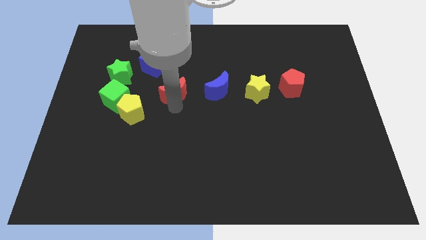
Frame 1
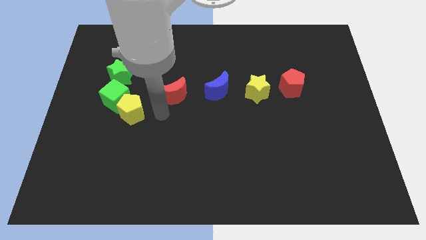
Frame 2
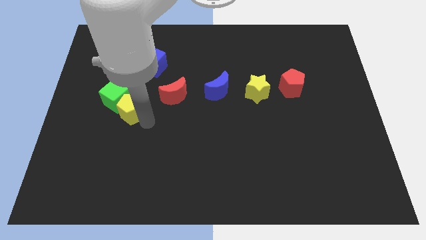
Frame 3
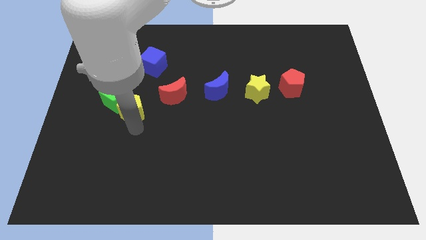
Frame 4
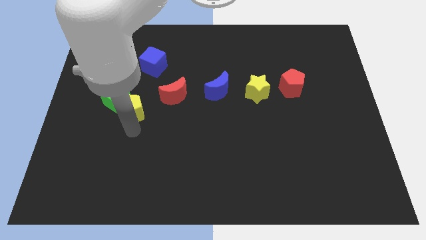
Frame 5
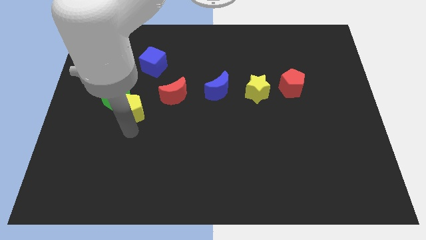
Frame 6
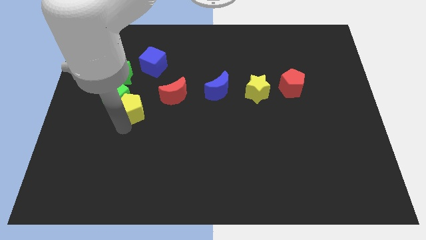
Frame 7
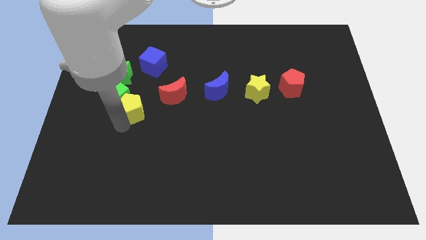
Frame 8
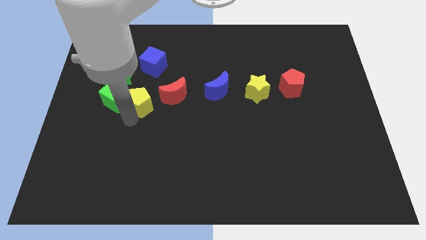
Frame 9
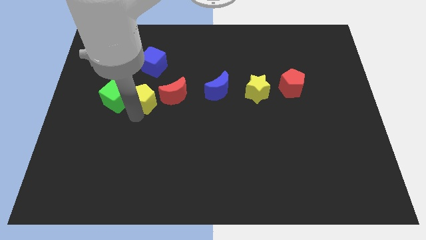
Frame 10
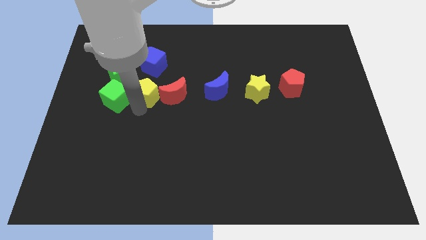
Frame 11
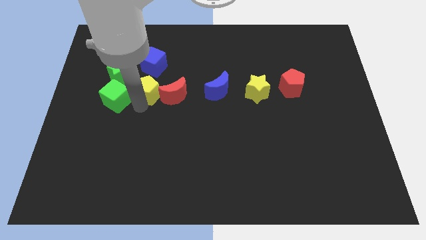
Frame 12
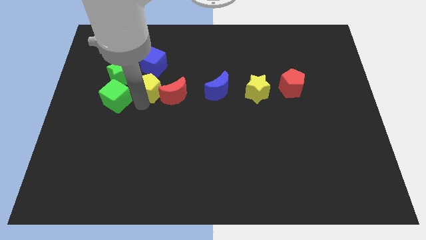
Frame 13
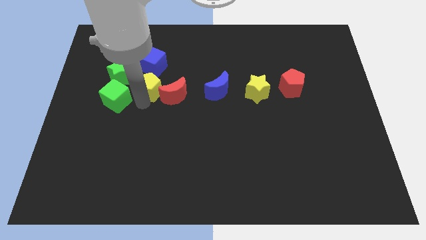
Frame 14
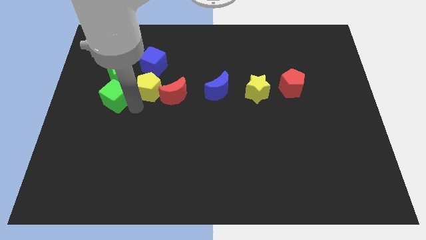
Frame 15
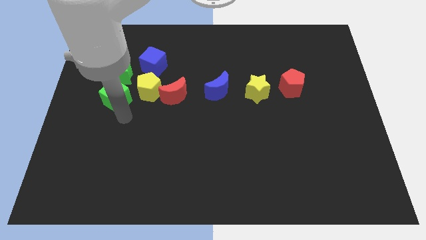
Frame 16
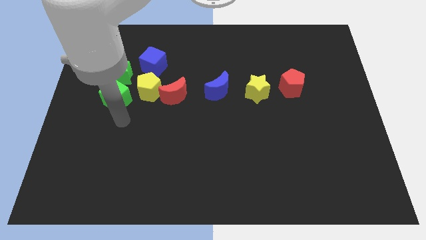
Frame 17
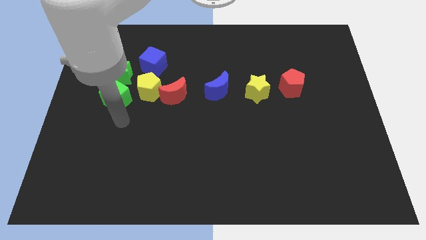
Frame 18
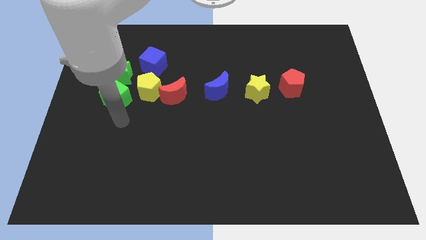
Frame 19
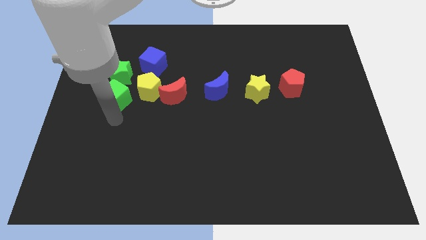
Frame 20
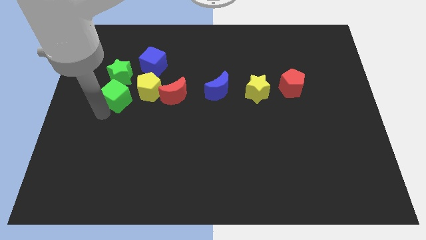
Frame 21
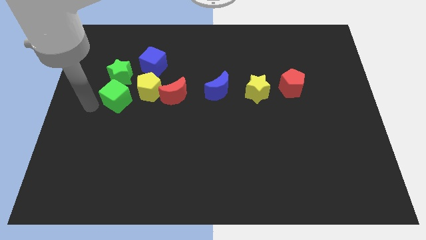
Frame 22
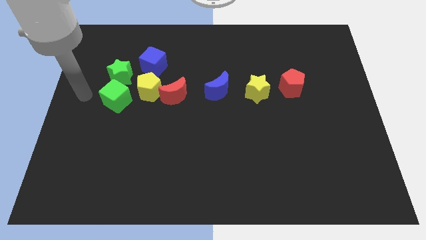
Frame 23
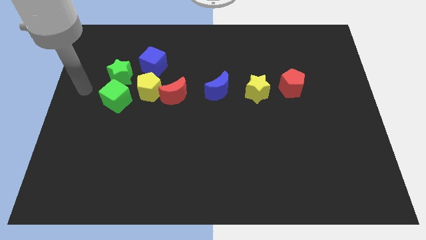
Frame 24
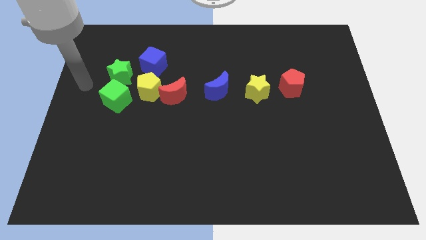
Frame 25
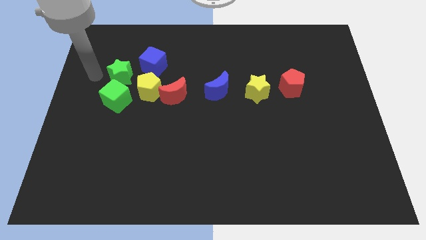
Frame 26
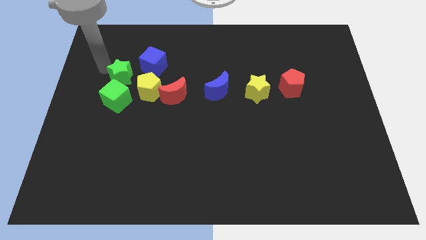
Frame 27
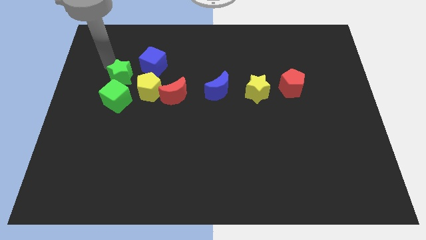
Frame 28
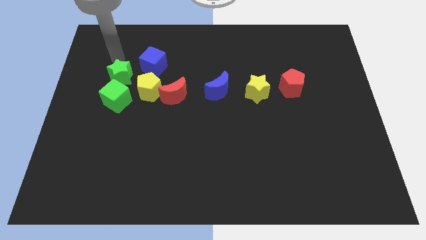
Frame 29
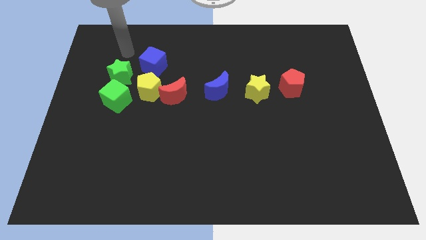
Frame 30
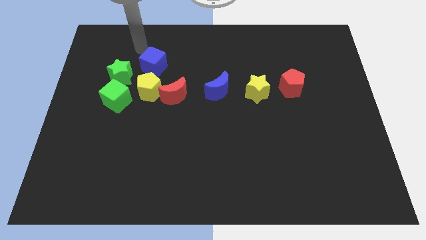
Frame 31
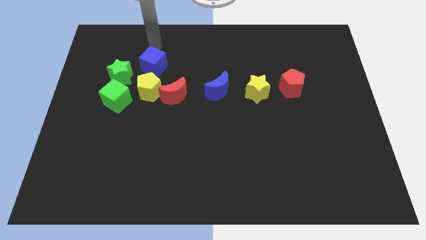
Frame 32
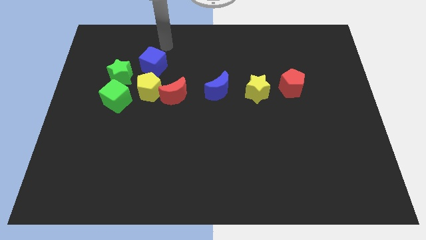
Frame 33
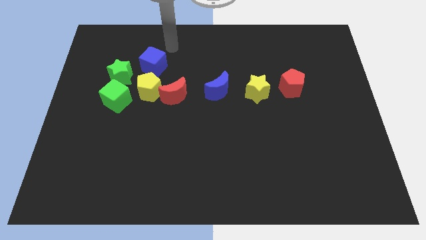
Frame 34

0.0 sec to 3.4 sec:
place the yellow pentagon and blue cube in a line vertically

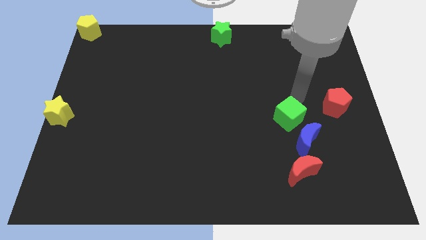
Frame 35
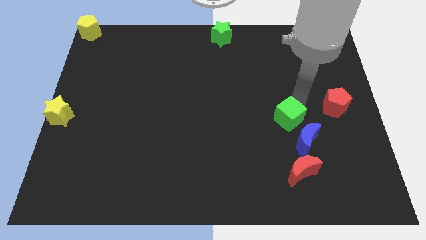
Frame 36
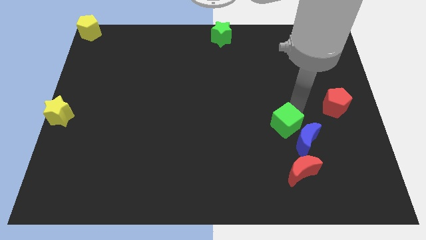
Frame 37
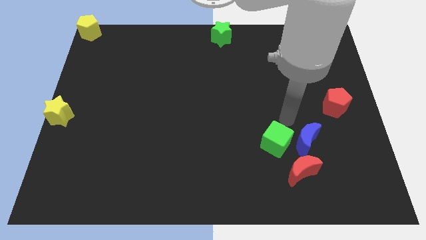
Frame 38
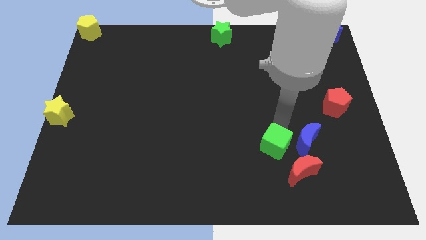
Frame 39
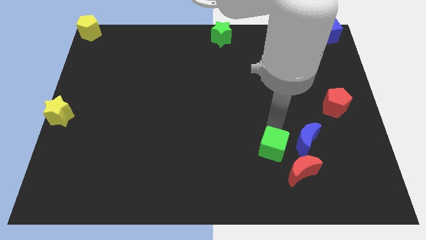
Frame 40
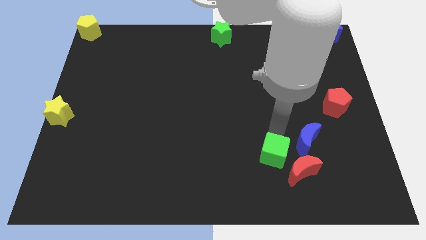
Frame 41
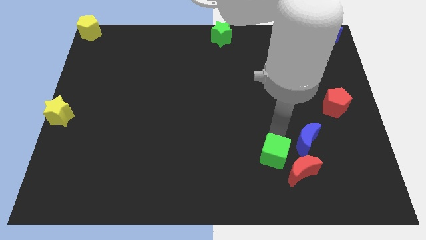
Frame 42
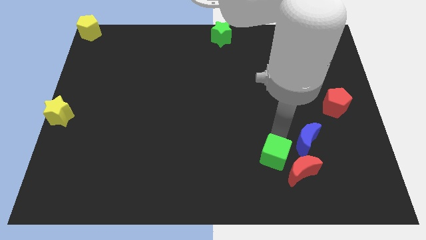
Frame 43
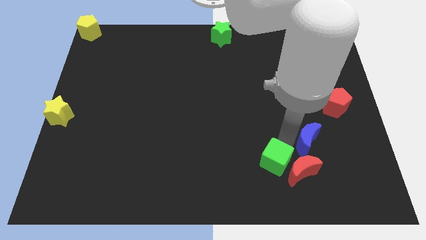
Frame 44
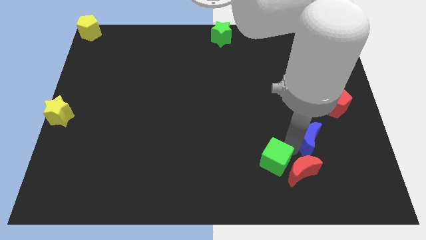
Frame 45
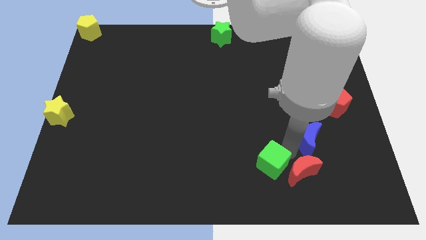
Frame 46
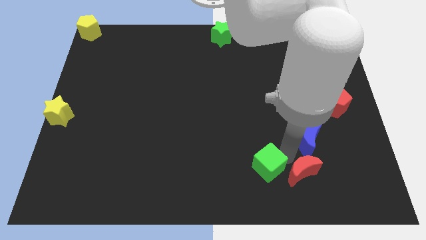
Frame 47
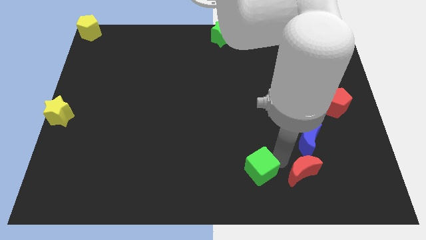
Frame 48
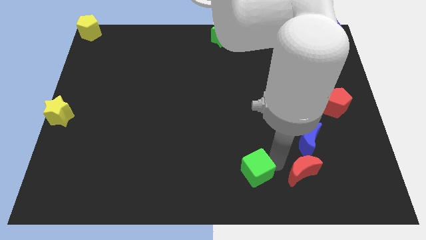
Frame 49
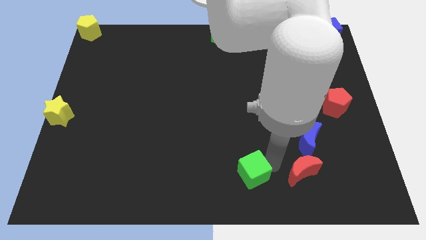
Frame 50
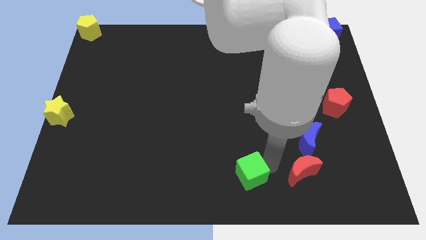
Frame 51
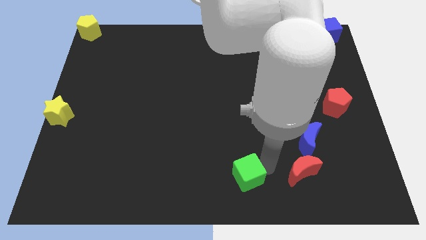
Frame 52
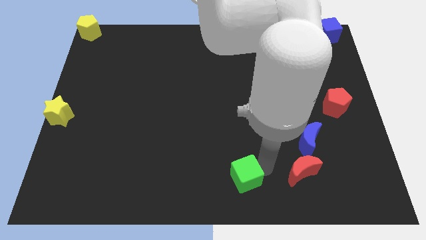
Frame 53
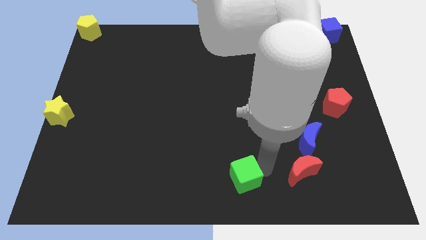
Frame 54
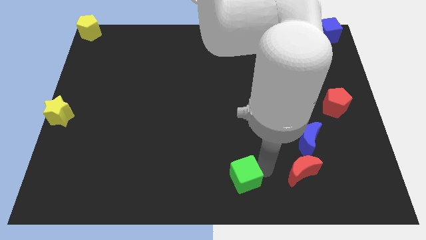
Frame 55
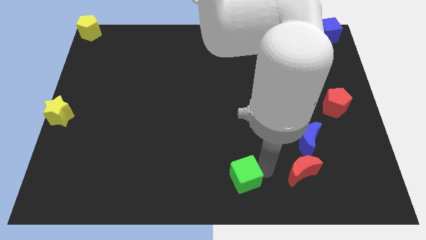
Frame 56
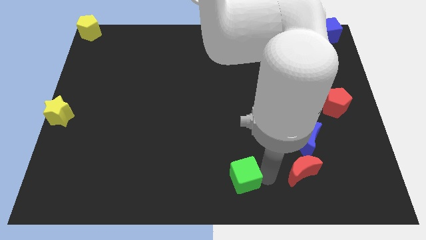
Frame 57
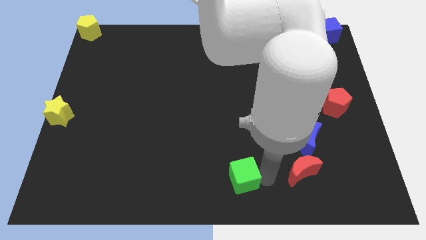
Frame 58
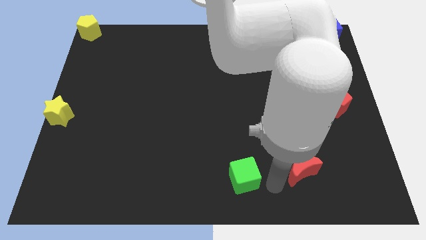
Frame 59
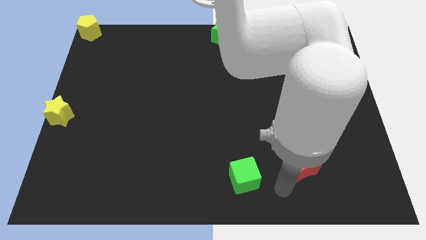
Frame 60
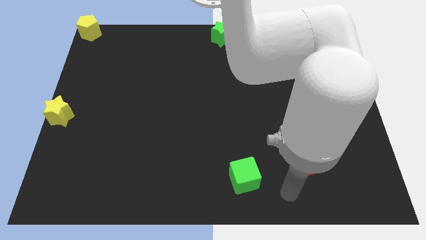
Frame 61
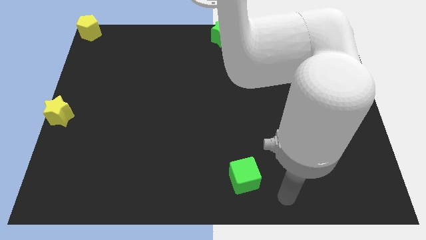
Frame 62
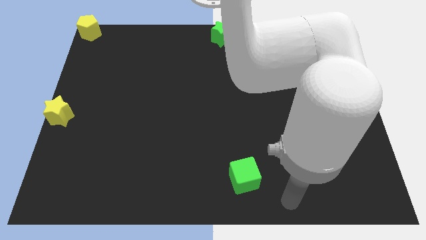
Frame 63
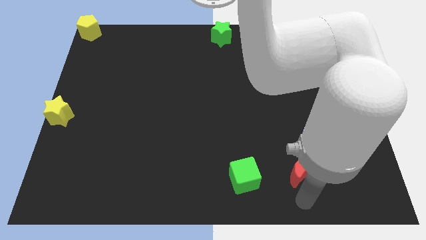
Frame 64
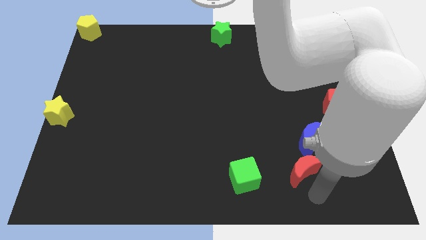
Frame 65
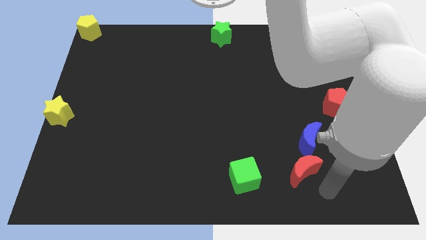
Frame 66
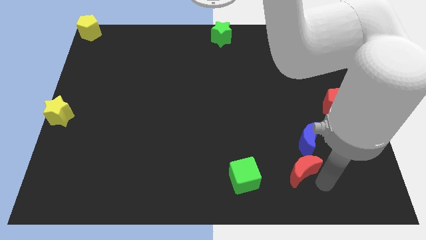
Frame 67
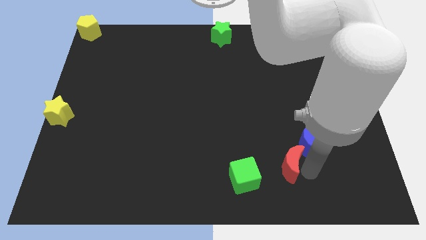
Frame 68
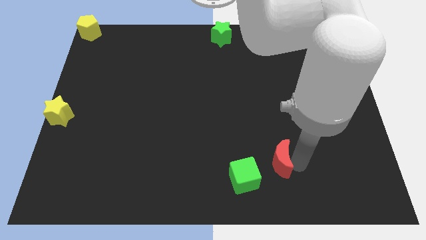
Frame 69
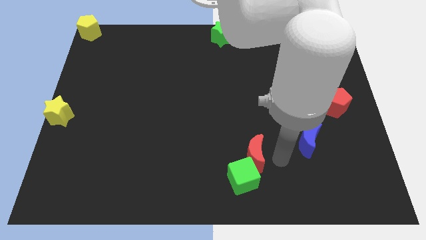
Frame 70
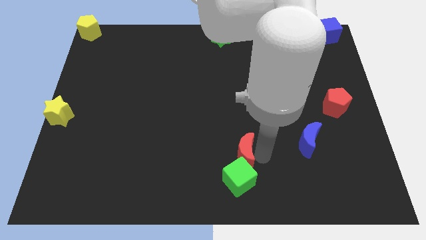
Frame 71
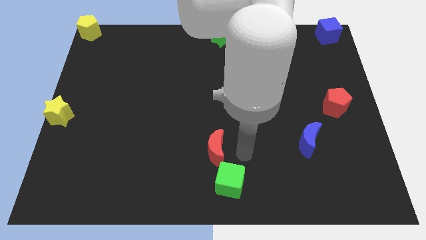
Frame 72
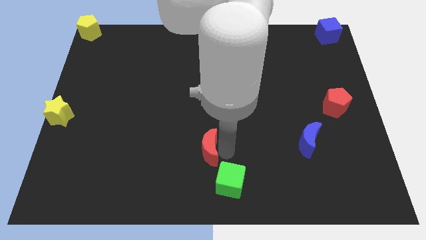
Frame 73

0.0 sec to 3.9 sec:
move the green cube and red moon to the bottom center

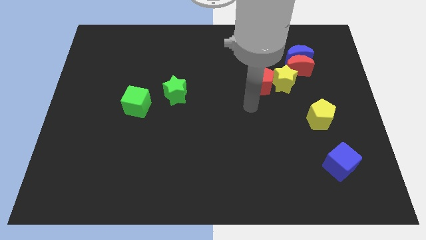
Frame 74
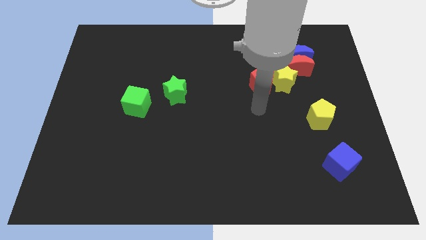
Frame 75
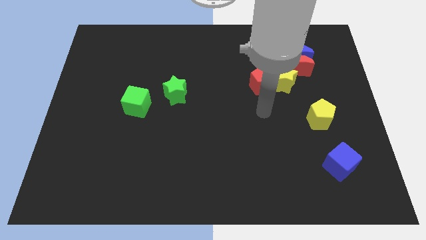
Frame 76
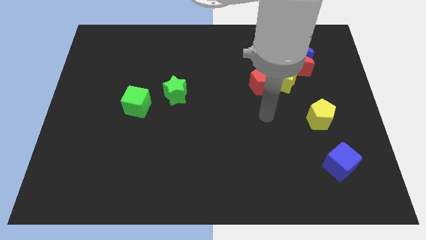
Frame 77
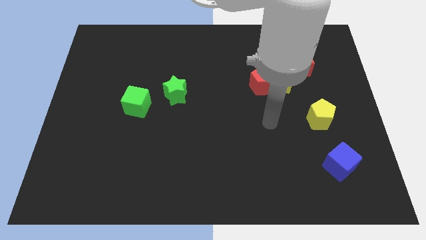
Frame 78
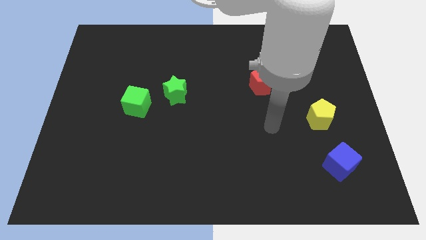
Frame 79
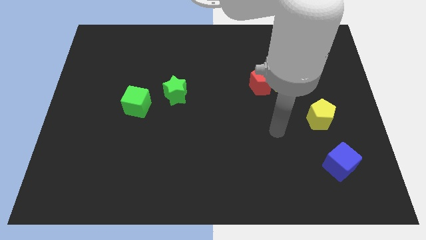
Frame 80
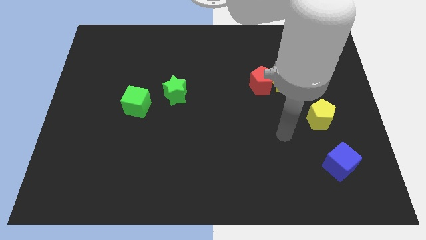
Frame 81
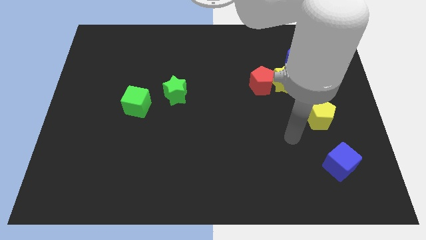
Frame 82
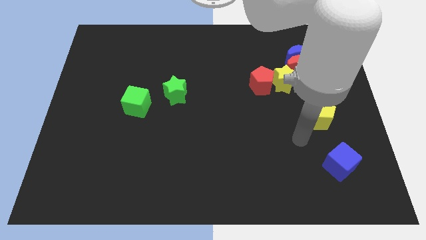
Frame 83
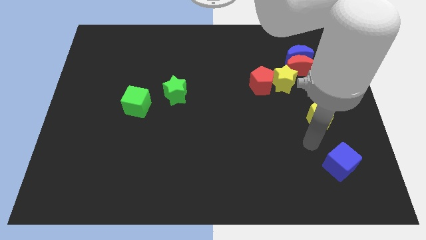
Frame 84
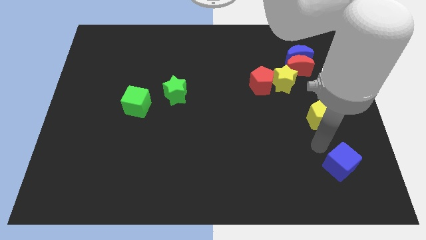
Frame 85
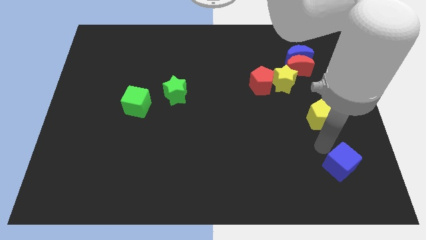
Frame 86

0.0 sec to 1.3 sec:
move robot arm towards blue cube

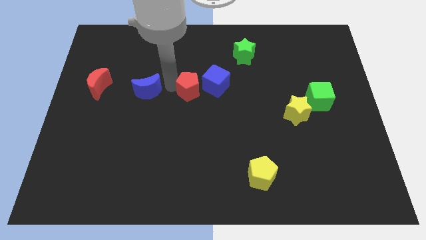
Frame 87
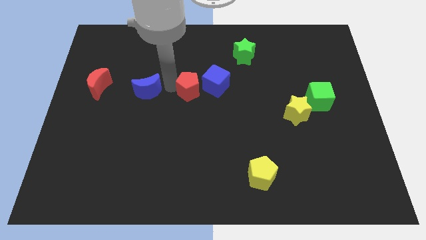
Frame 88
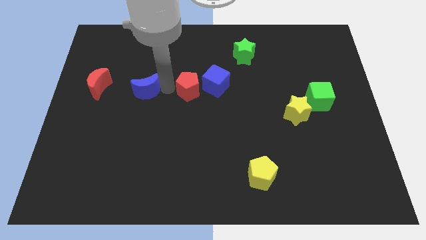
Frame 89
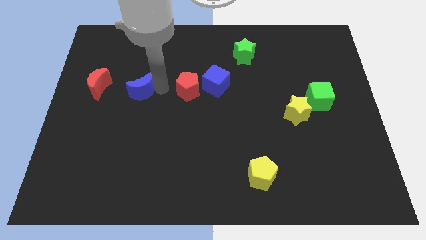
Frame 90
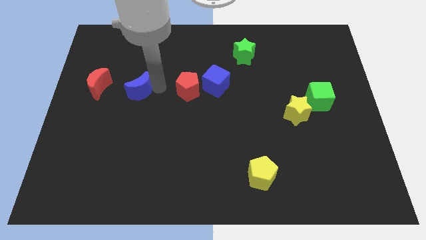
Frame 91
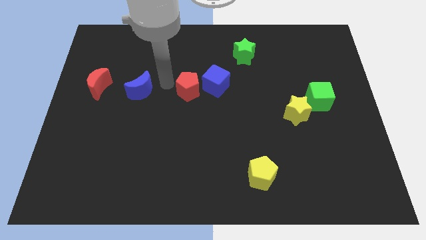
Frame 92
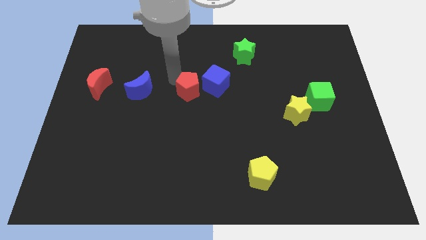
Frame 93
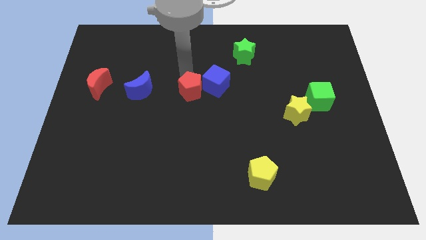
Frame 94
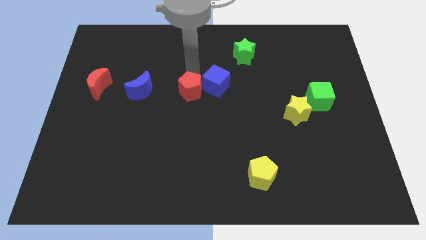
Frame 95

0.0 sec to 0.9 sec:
move blue crescent to the left side
